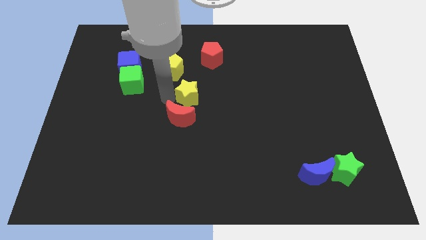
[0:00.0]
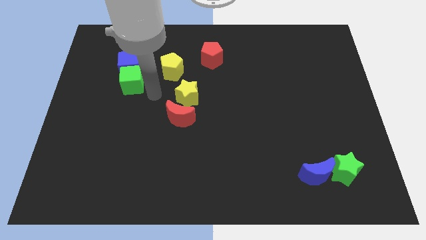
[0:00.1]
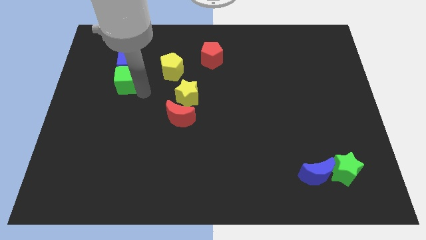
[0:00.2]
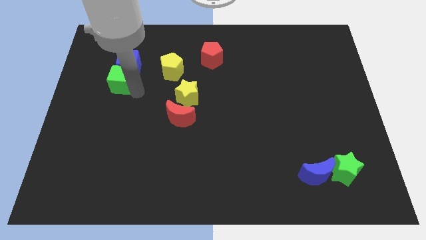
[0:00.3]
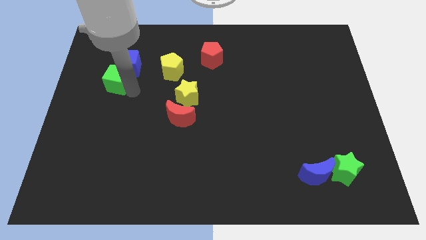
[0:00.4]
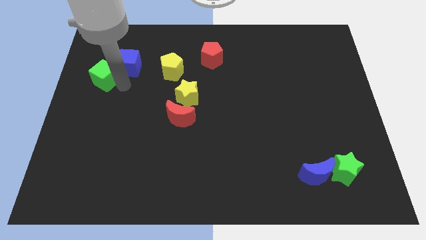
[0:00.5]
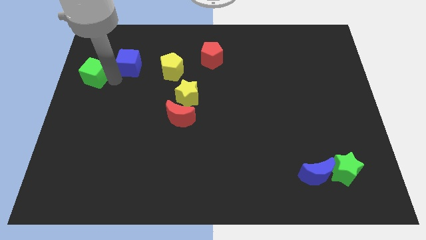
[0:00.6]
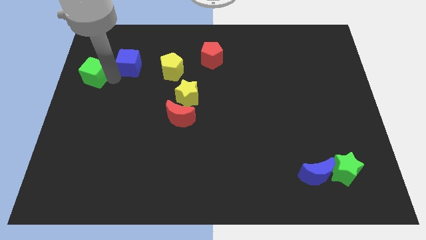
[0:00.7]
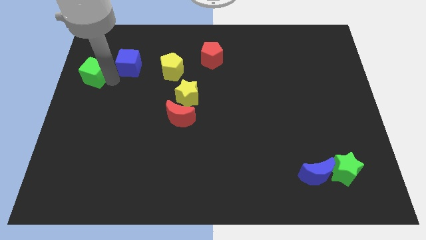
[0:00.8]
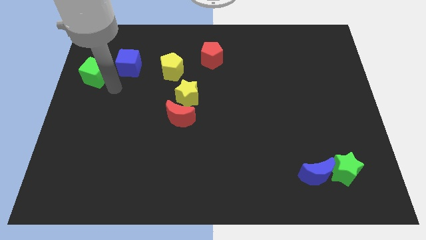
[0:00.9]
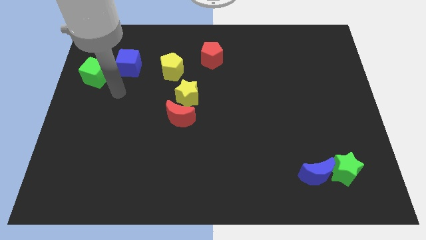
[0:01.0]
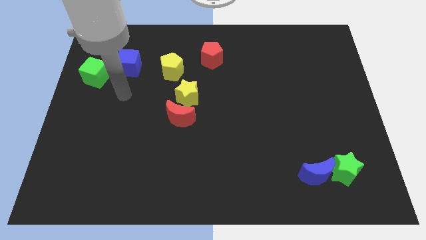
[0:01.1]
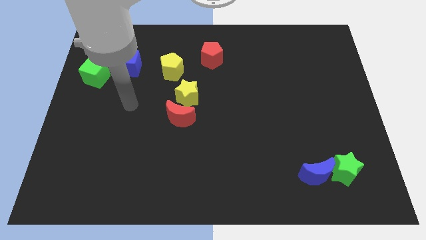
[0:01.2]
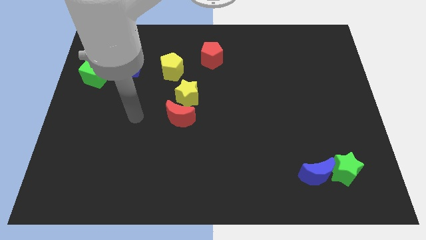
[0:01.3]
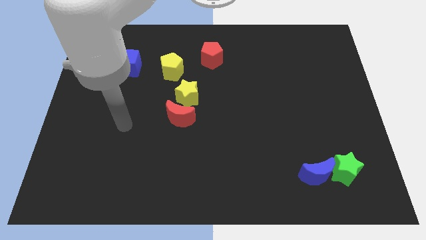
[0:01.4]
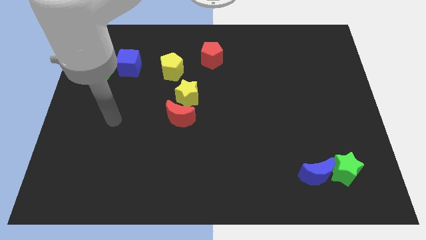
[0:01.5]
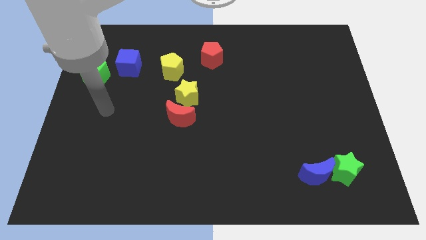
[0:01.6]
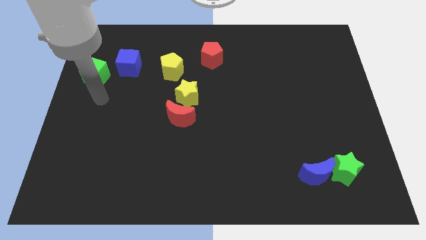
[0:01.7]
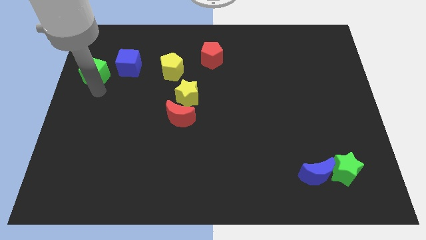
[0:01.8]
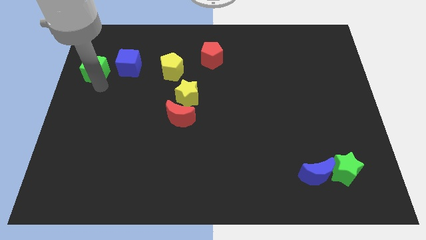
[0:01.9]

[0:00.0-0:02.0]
place the green cube to the left side of blue cube

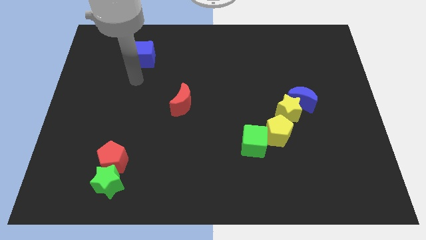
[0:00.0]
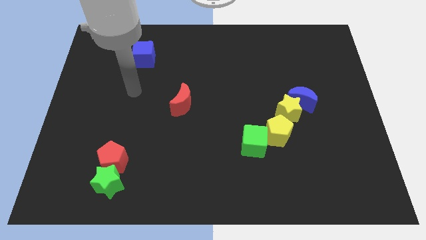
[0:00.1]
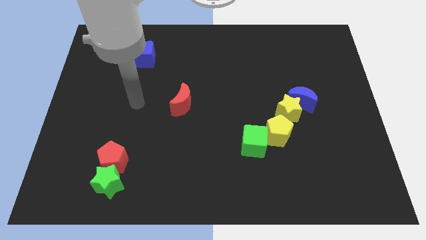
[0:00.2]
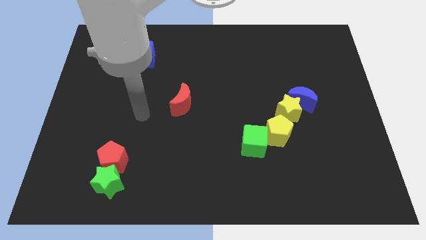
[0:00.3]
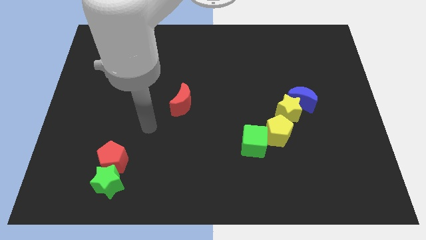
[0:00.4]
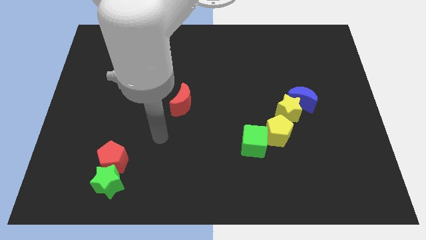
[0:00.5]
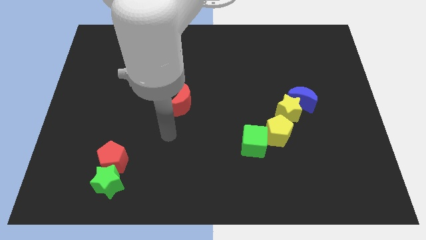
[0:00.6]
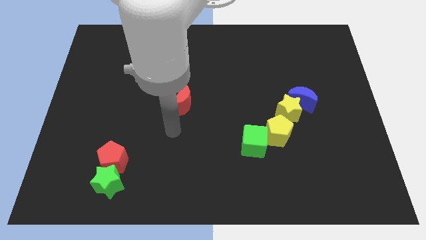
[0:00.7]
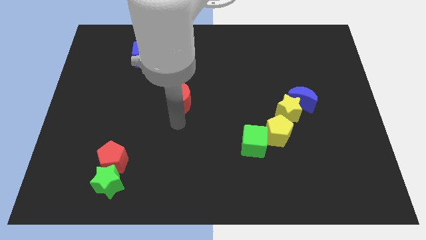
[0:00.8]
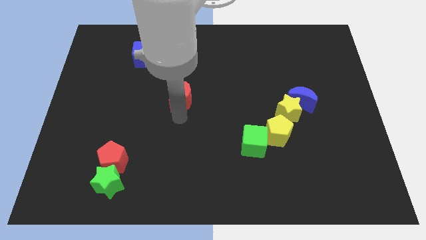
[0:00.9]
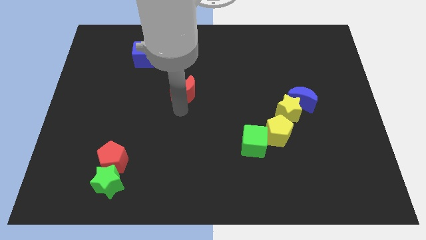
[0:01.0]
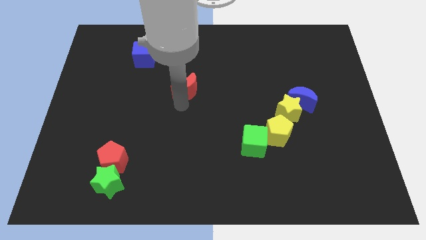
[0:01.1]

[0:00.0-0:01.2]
touch the bottom of red crescent

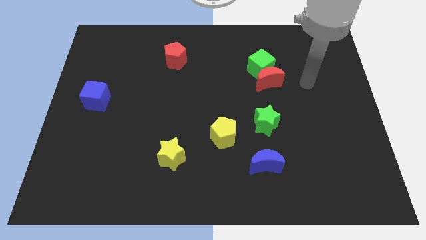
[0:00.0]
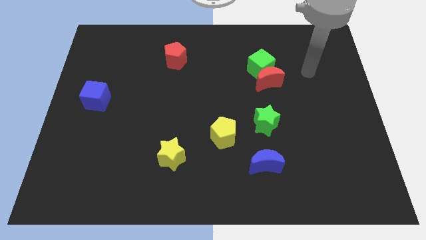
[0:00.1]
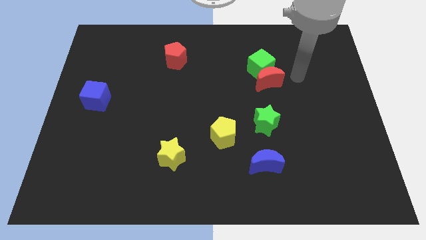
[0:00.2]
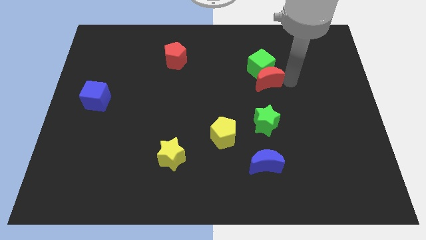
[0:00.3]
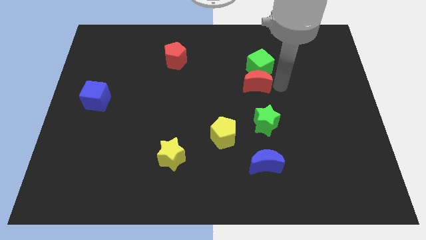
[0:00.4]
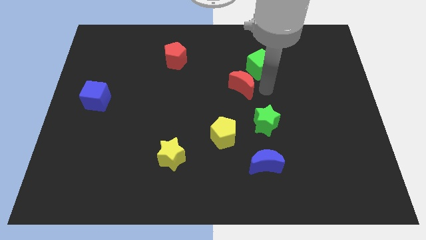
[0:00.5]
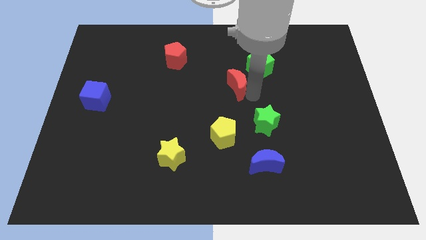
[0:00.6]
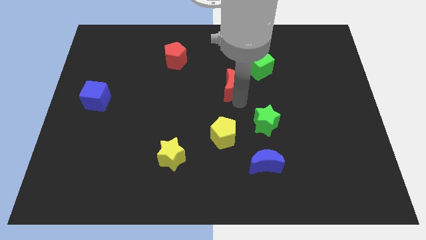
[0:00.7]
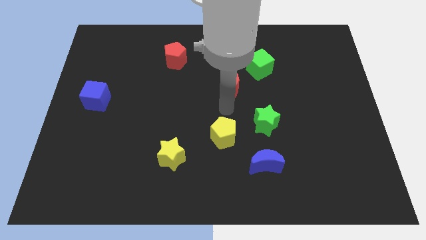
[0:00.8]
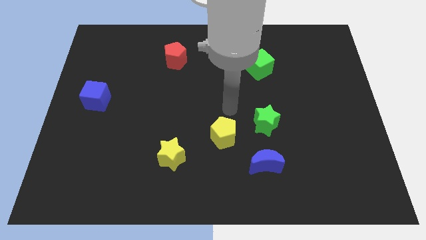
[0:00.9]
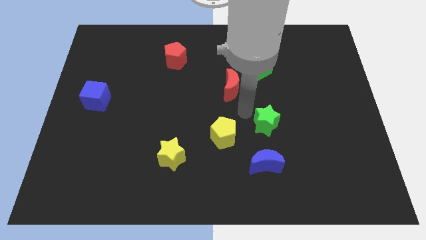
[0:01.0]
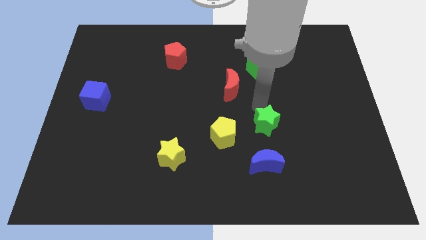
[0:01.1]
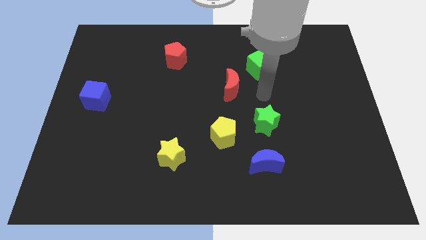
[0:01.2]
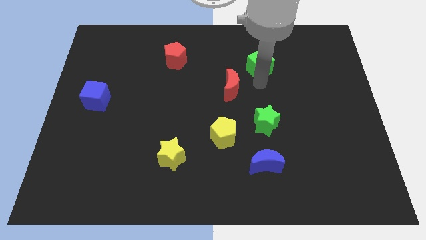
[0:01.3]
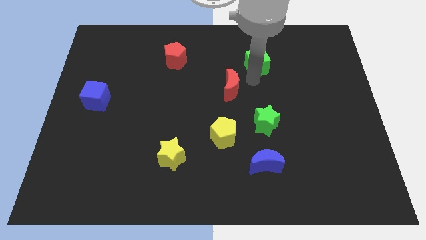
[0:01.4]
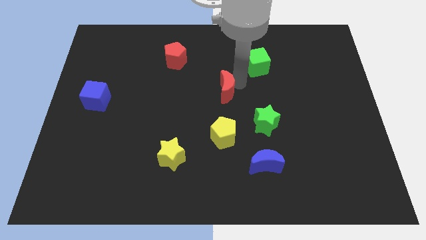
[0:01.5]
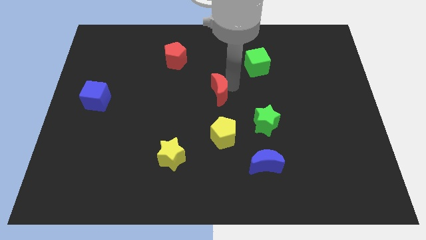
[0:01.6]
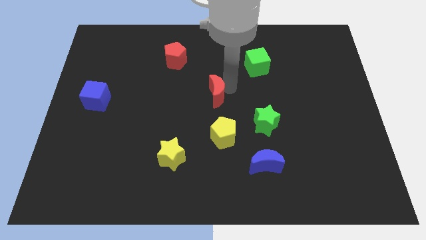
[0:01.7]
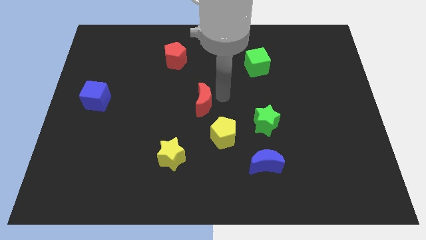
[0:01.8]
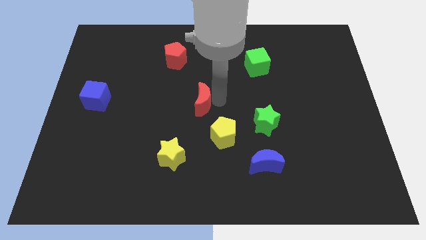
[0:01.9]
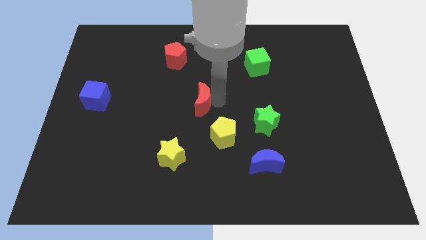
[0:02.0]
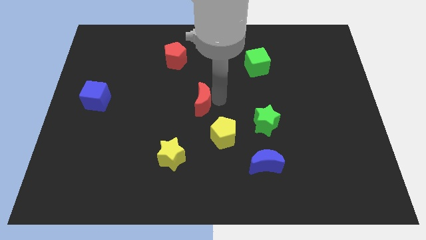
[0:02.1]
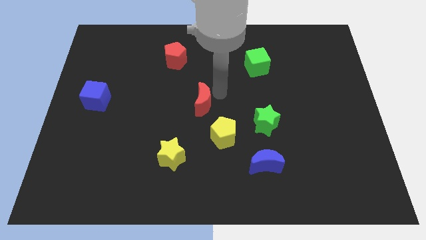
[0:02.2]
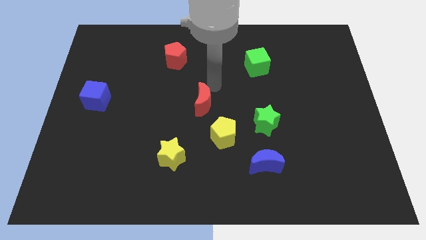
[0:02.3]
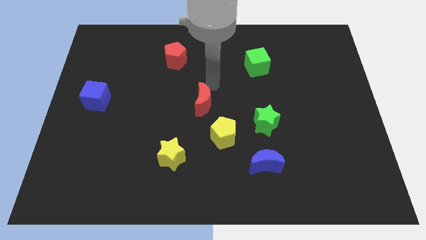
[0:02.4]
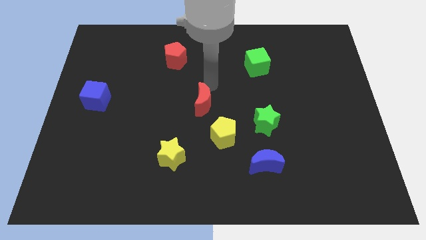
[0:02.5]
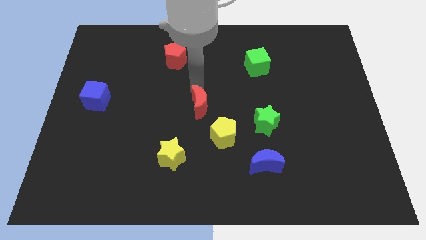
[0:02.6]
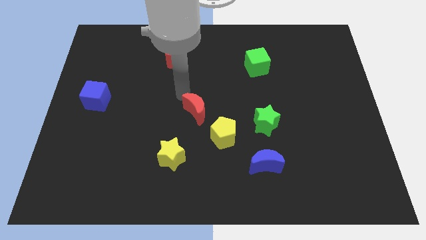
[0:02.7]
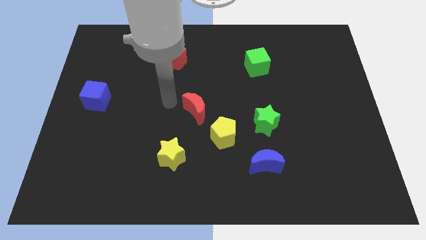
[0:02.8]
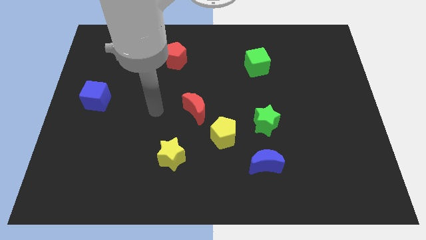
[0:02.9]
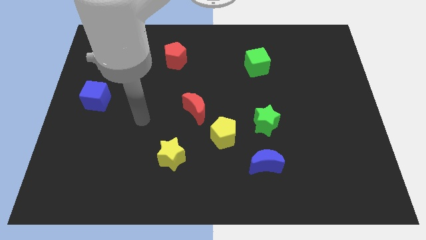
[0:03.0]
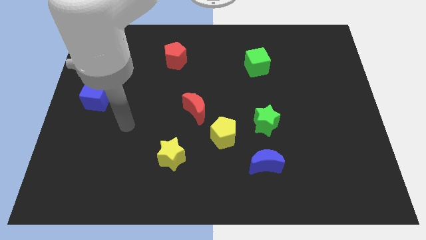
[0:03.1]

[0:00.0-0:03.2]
move the red crescent to the top left of the yellow pentagon

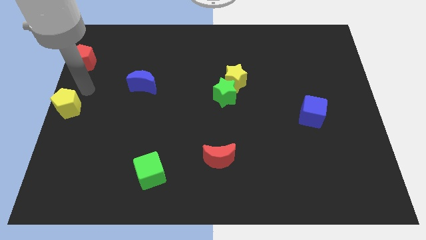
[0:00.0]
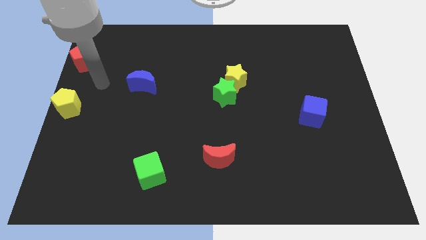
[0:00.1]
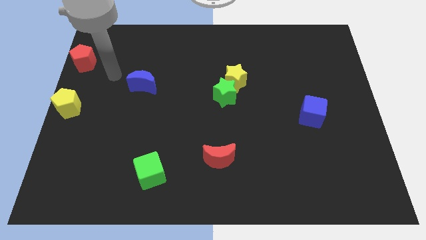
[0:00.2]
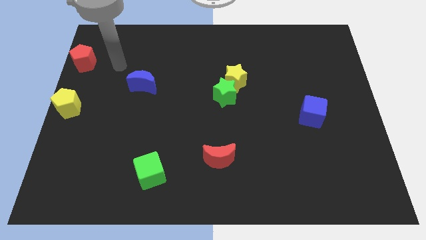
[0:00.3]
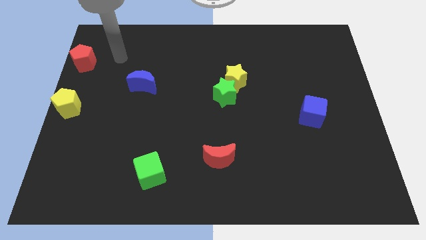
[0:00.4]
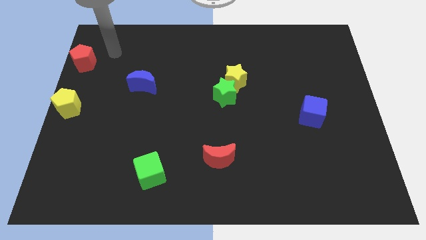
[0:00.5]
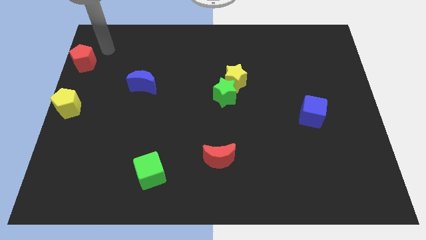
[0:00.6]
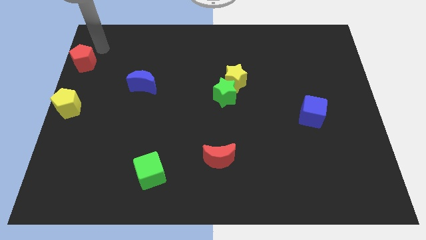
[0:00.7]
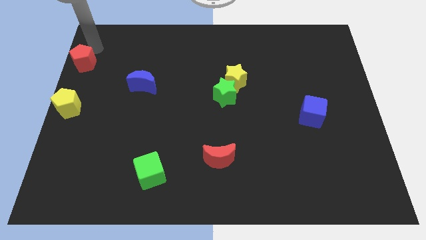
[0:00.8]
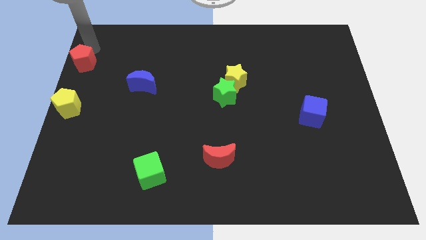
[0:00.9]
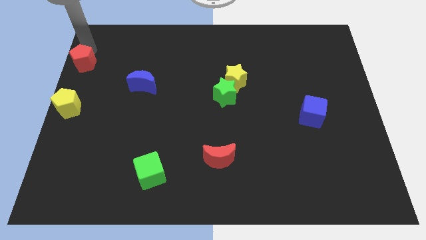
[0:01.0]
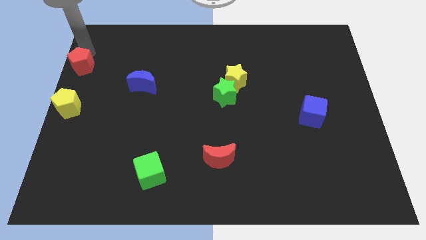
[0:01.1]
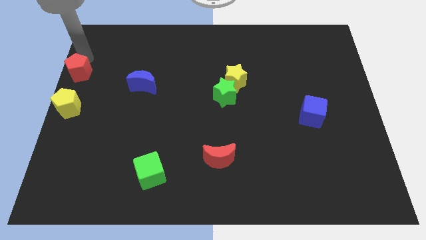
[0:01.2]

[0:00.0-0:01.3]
place your arm above the red pentagon

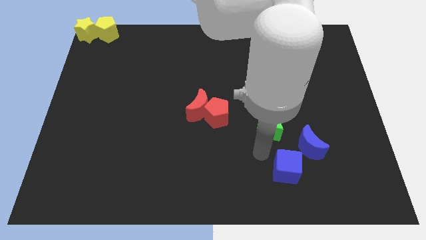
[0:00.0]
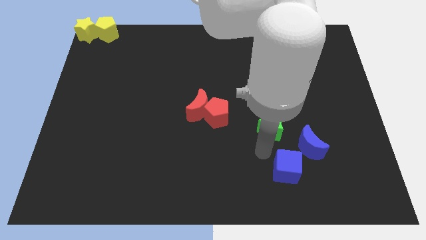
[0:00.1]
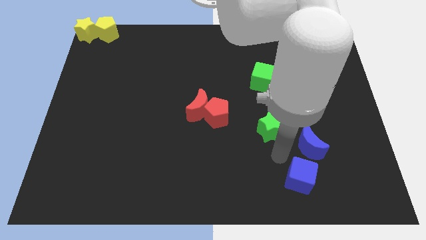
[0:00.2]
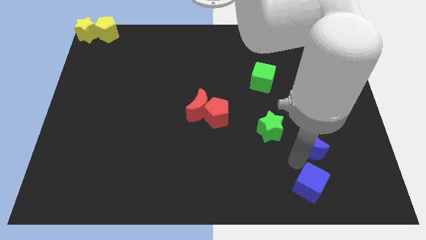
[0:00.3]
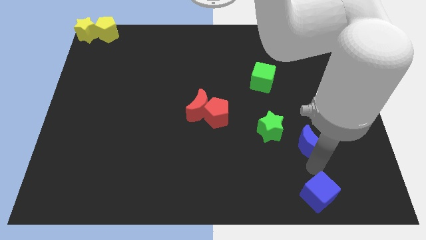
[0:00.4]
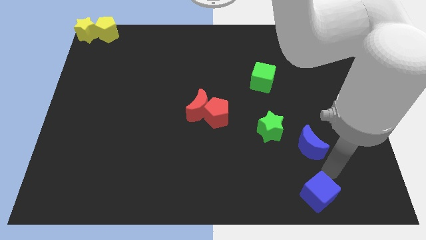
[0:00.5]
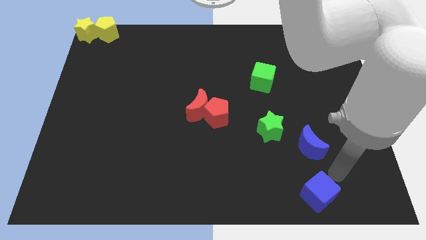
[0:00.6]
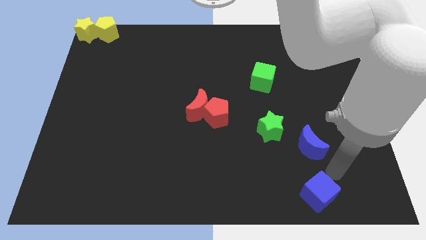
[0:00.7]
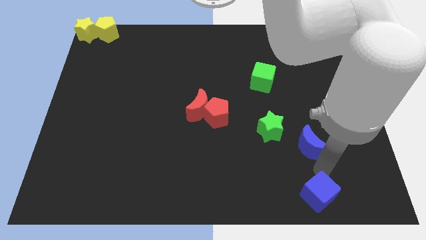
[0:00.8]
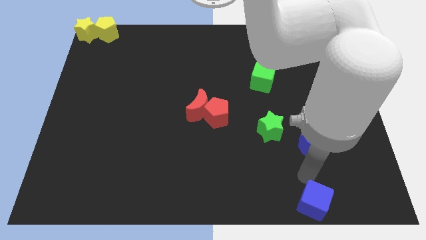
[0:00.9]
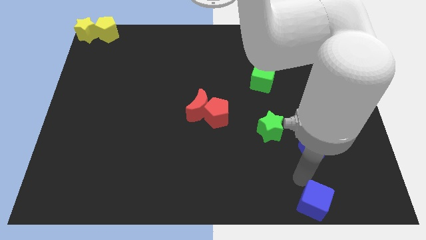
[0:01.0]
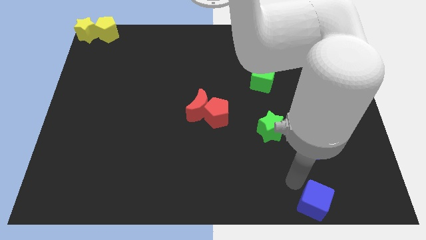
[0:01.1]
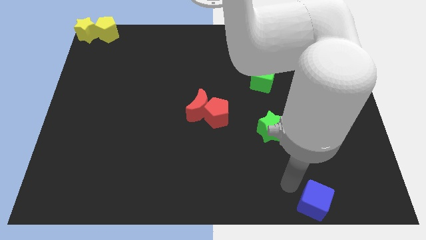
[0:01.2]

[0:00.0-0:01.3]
move the blue cube vertically to the bottom of blue crescent
